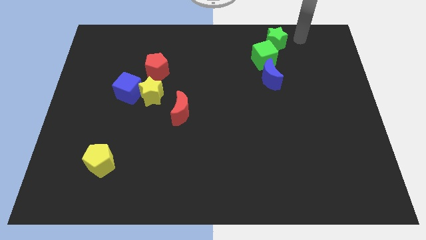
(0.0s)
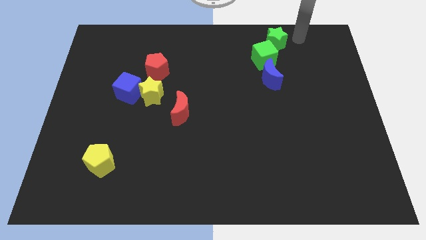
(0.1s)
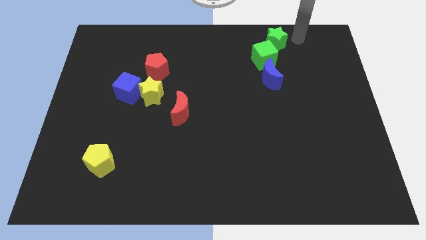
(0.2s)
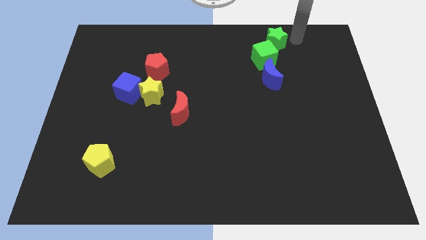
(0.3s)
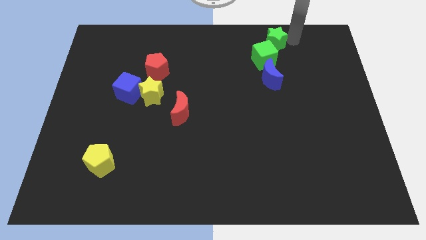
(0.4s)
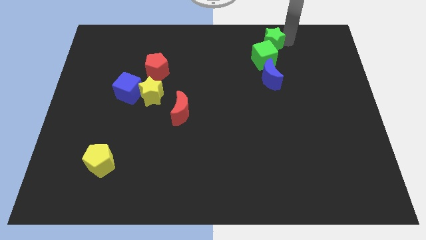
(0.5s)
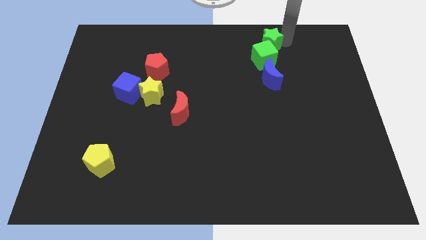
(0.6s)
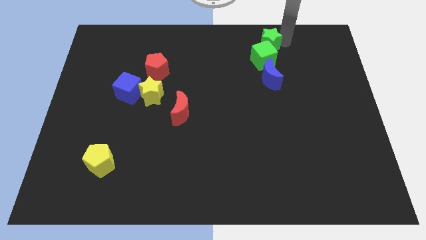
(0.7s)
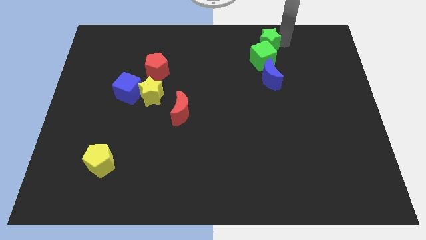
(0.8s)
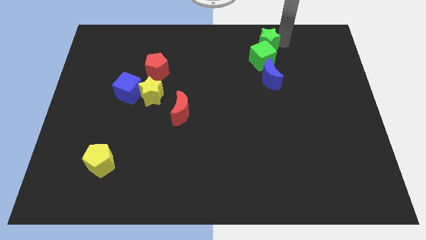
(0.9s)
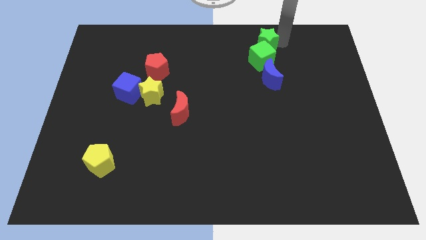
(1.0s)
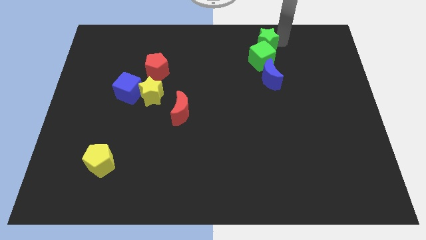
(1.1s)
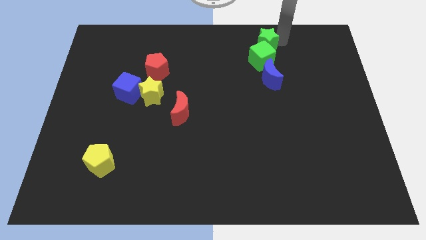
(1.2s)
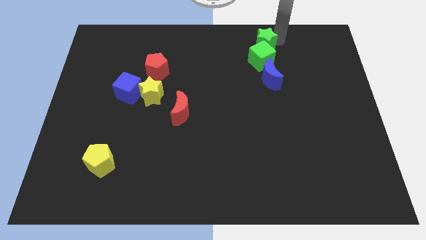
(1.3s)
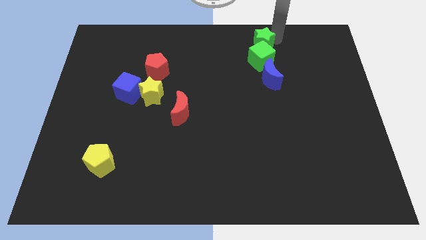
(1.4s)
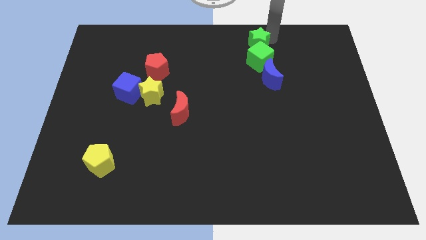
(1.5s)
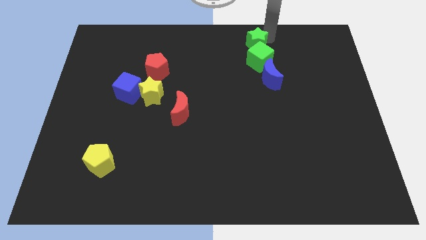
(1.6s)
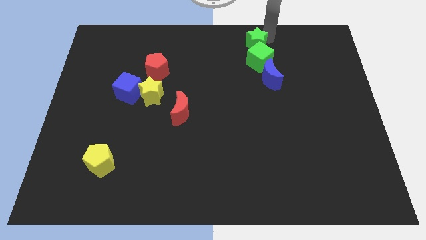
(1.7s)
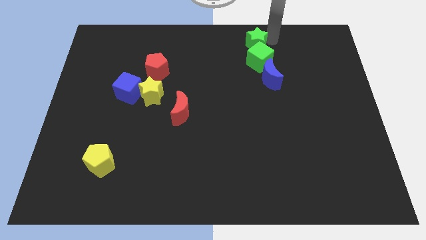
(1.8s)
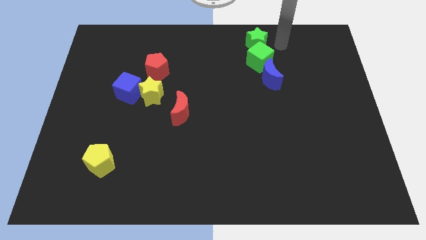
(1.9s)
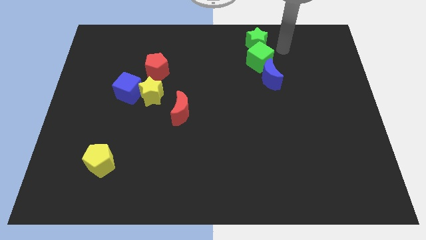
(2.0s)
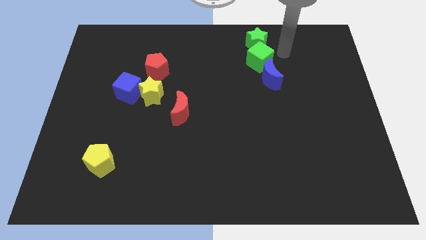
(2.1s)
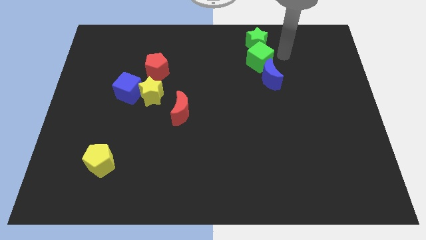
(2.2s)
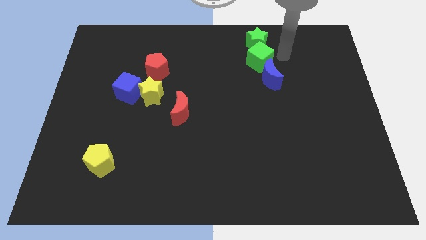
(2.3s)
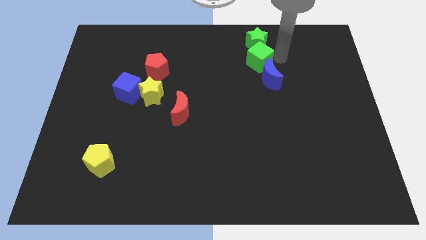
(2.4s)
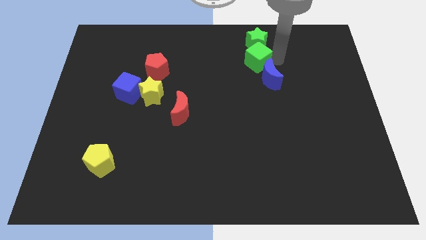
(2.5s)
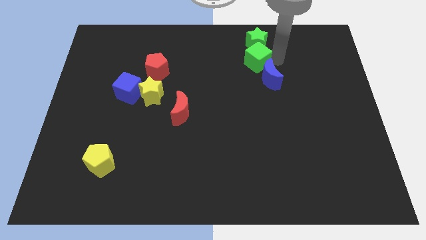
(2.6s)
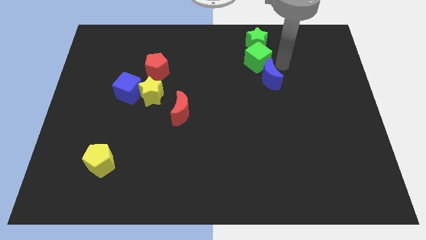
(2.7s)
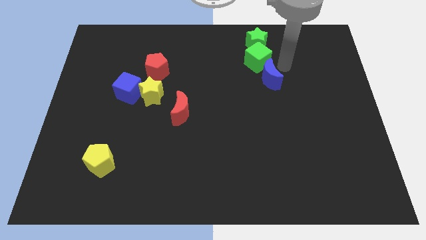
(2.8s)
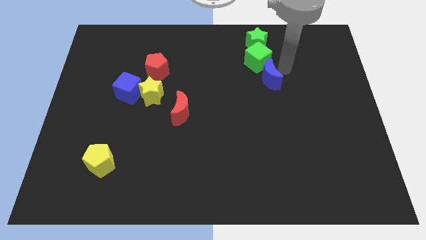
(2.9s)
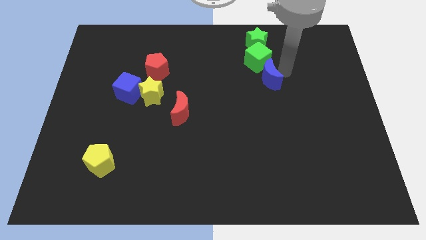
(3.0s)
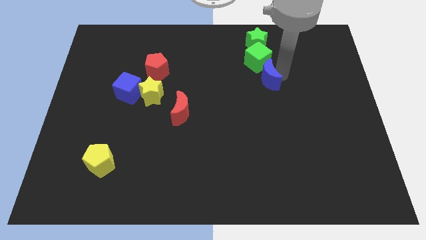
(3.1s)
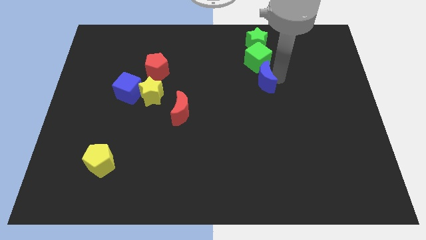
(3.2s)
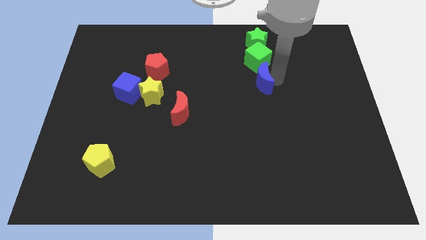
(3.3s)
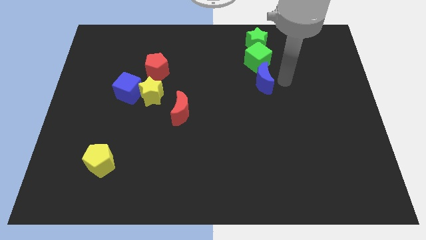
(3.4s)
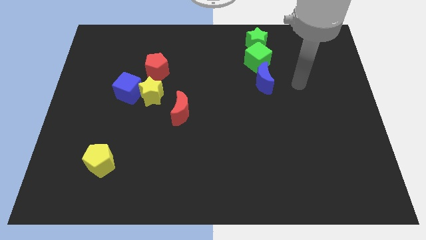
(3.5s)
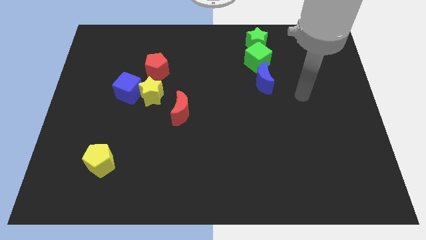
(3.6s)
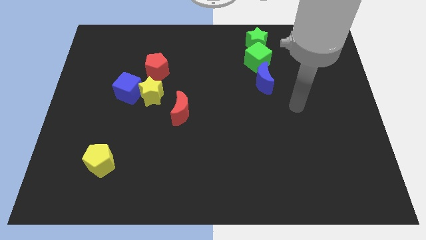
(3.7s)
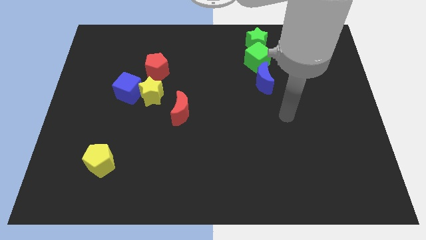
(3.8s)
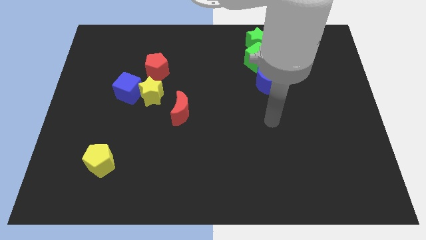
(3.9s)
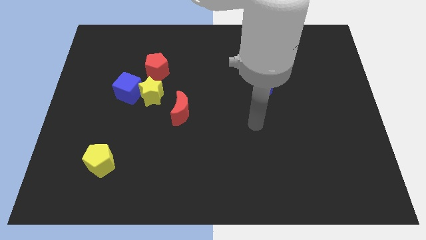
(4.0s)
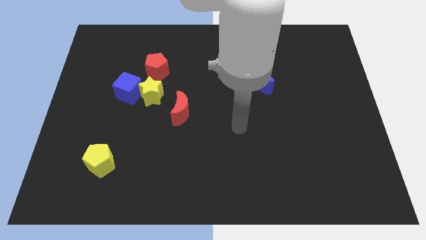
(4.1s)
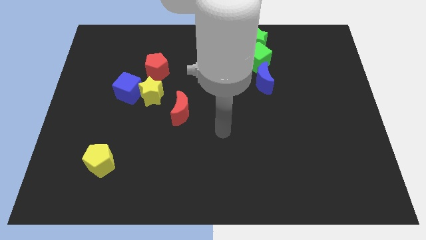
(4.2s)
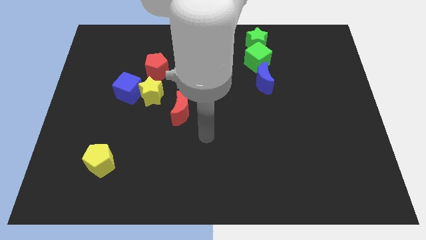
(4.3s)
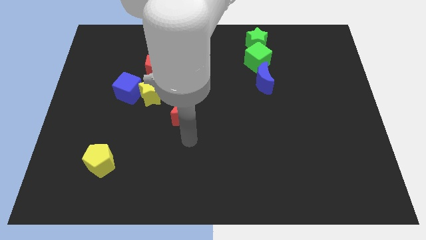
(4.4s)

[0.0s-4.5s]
adjust the green blocks and the blue crescent to form a vertical line

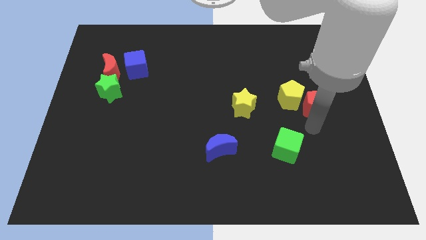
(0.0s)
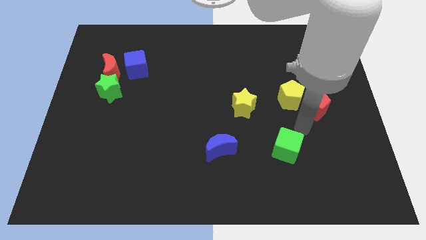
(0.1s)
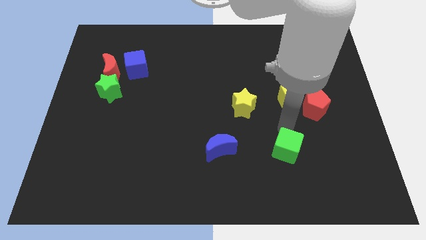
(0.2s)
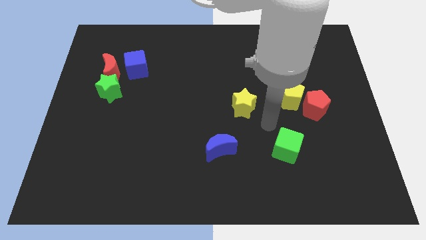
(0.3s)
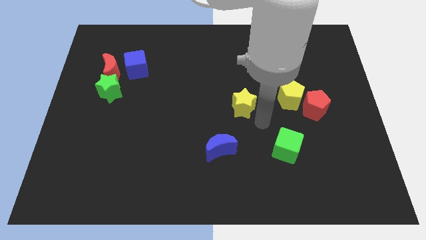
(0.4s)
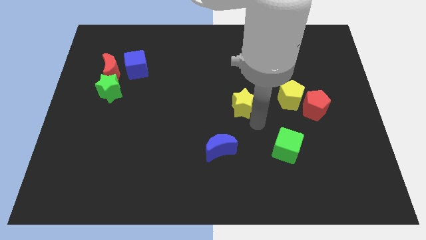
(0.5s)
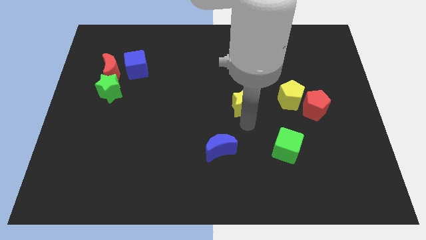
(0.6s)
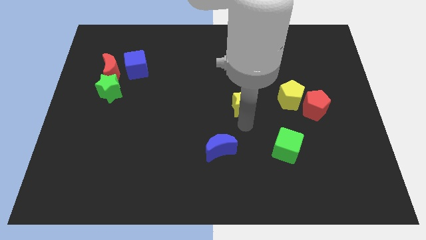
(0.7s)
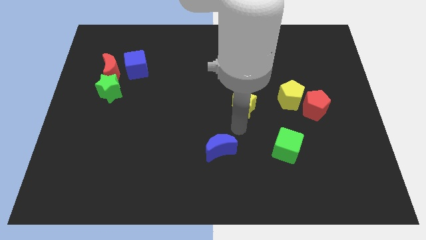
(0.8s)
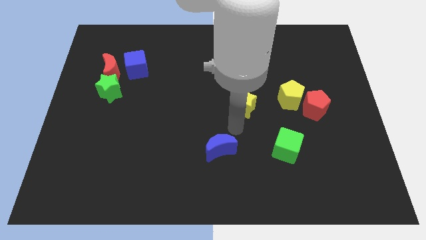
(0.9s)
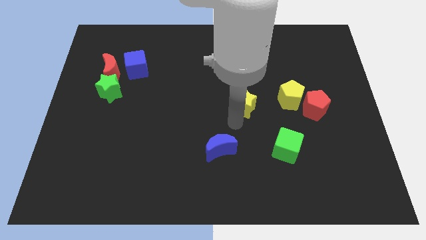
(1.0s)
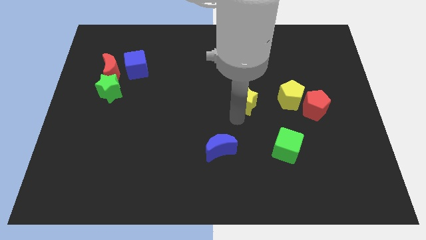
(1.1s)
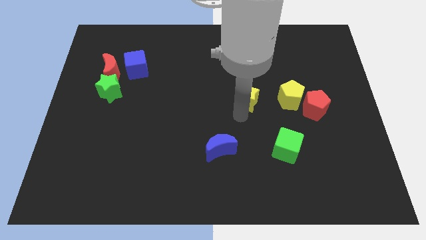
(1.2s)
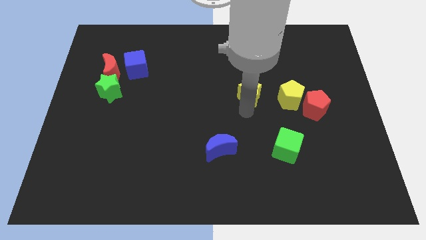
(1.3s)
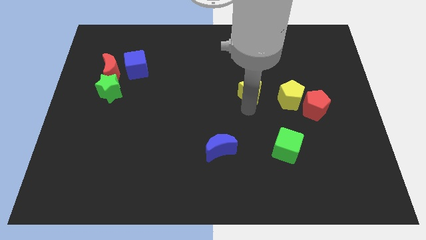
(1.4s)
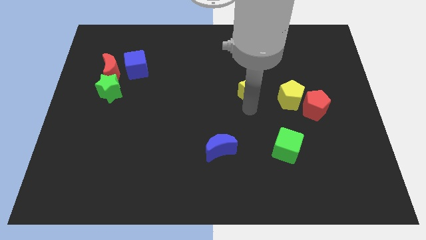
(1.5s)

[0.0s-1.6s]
place the yellow star to the left side of the yellow pentagon

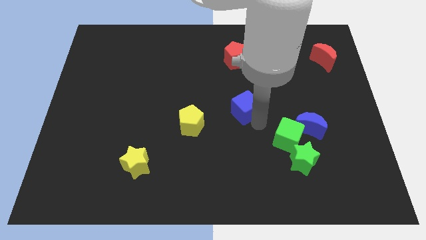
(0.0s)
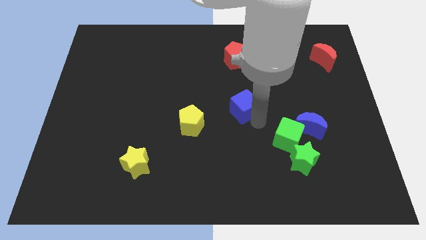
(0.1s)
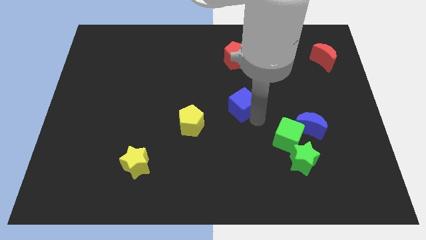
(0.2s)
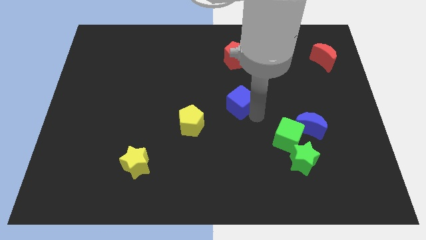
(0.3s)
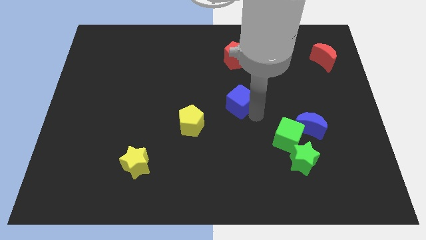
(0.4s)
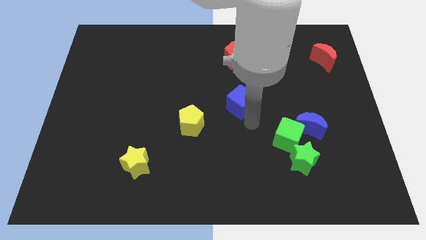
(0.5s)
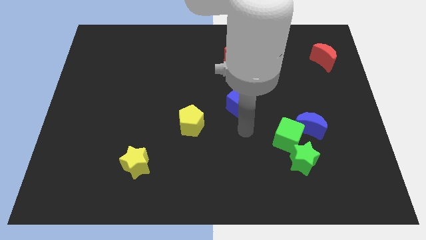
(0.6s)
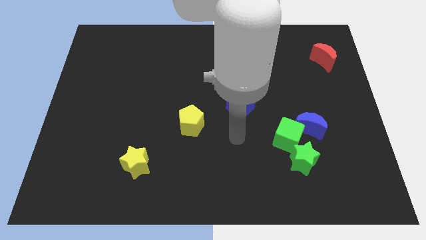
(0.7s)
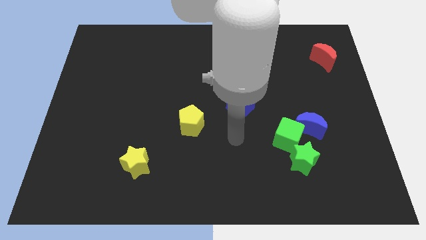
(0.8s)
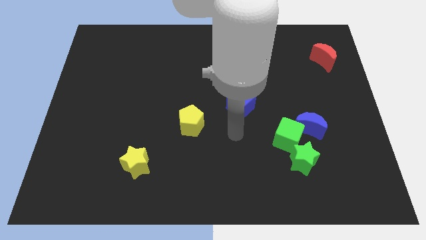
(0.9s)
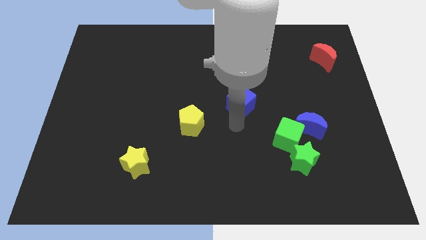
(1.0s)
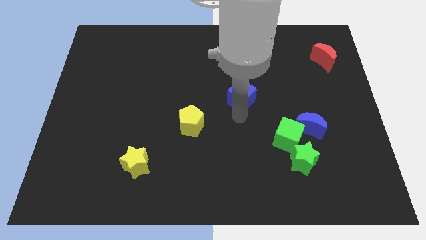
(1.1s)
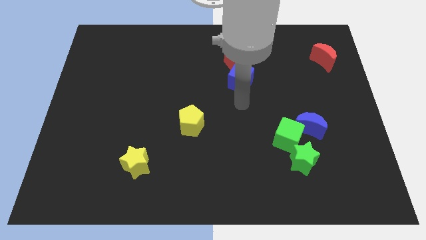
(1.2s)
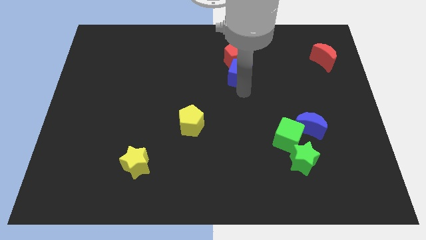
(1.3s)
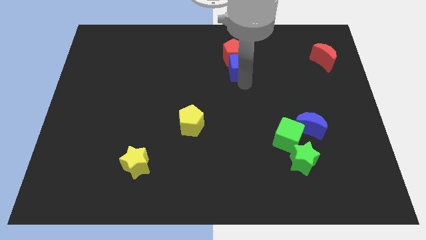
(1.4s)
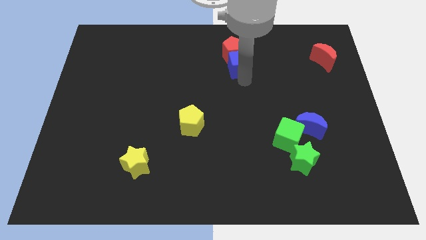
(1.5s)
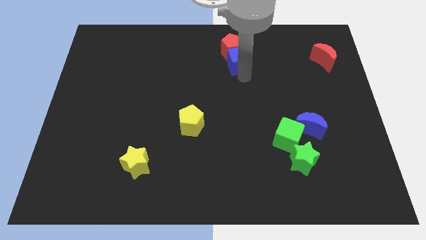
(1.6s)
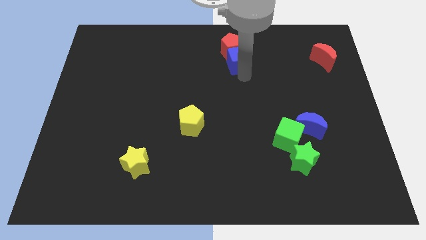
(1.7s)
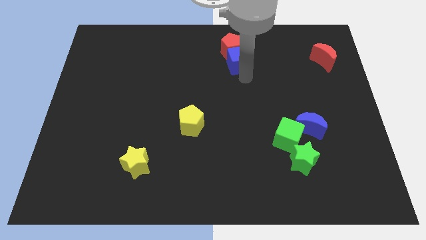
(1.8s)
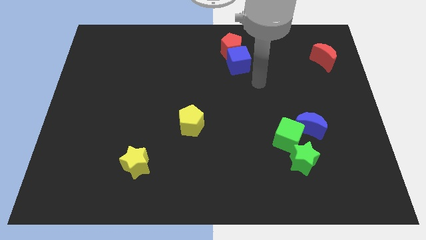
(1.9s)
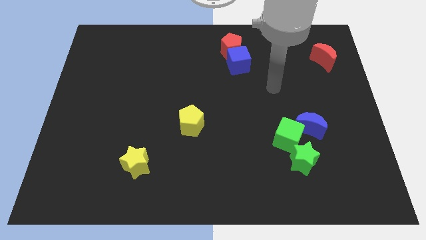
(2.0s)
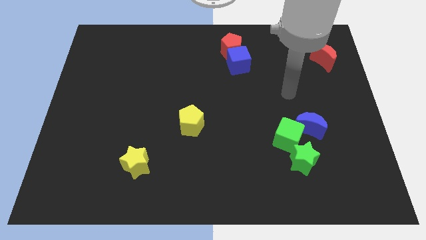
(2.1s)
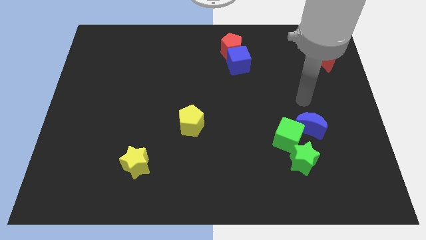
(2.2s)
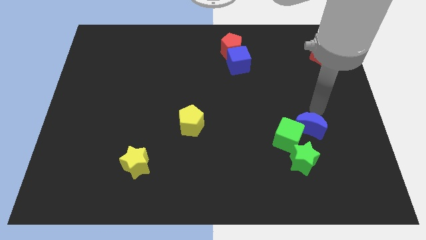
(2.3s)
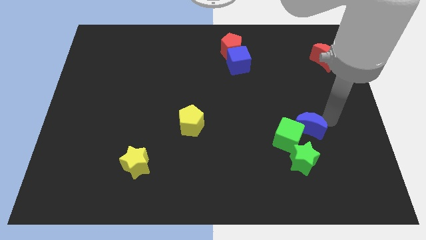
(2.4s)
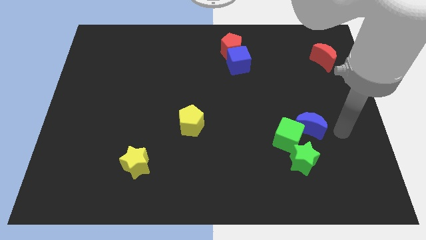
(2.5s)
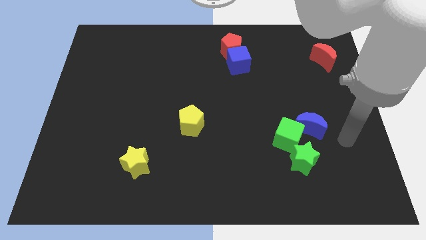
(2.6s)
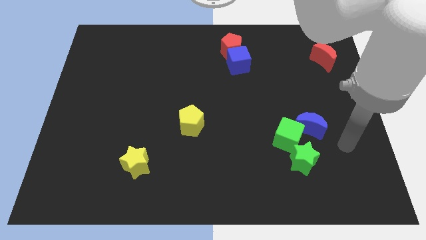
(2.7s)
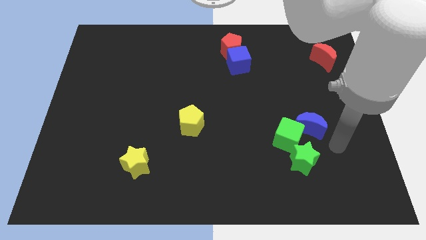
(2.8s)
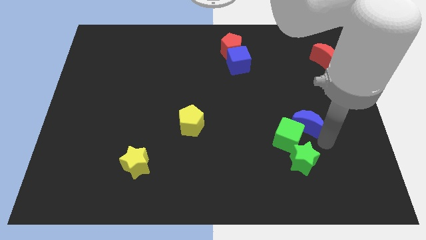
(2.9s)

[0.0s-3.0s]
place the blue cube into red pentagon
